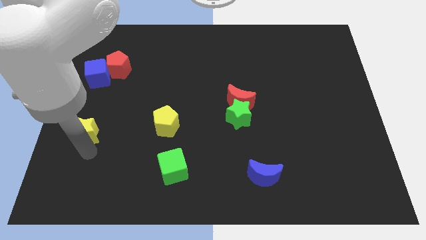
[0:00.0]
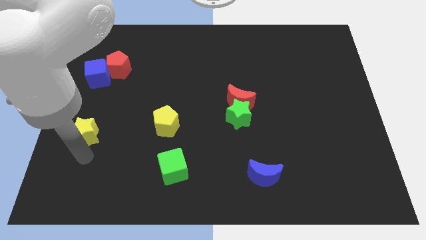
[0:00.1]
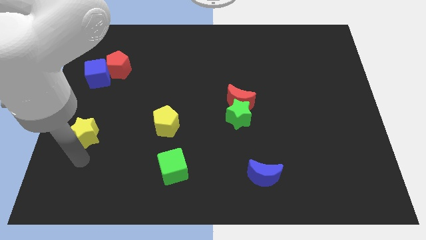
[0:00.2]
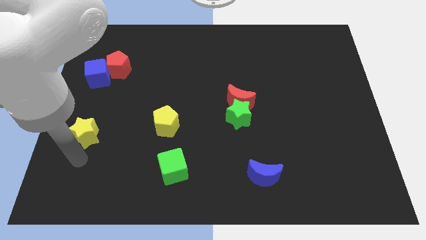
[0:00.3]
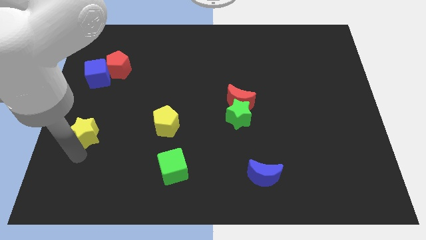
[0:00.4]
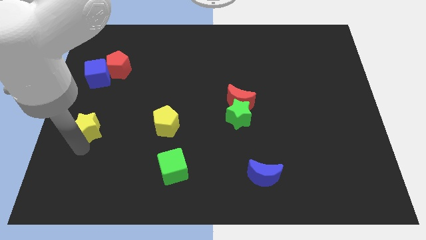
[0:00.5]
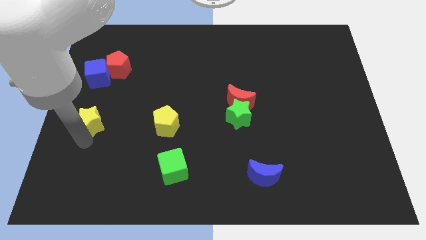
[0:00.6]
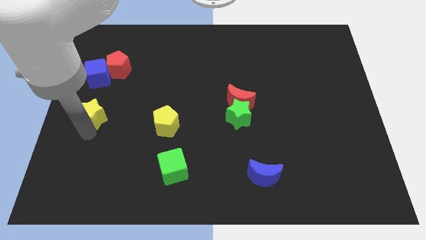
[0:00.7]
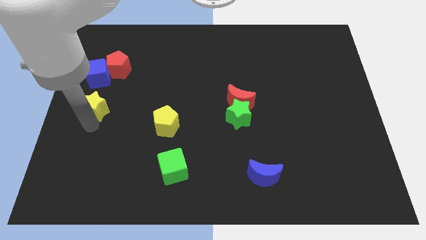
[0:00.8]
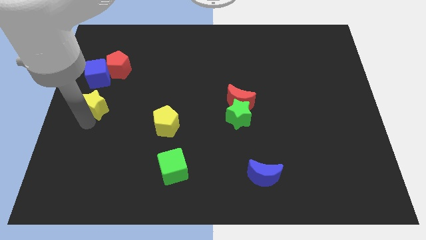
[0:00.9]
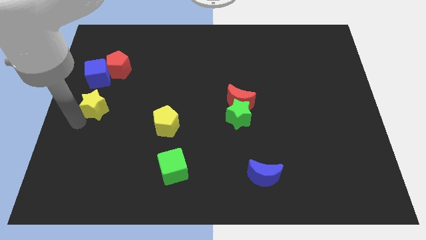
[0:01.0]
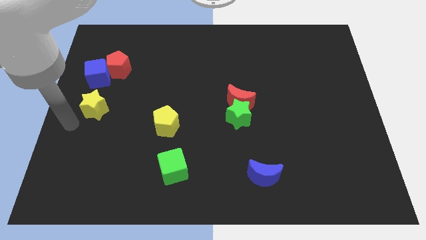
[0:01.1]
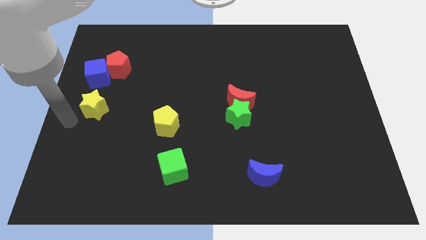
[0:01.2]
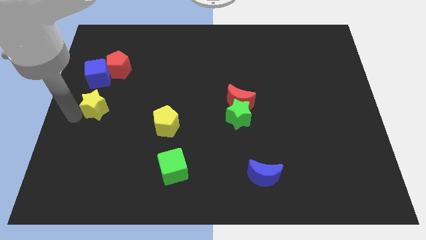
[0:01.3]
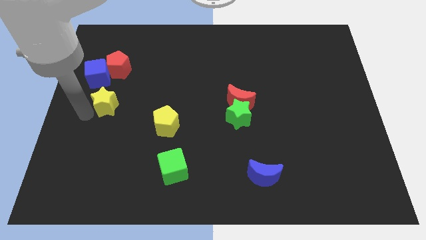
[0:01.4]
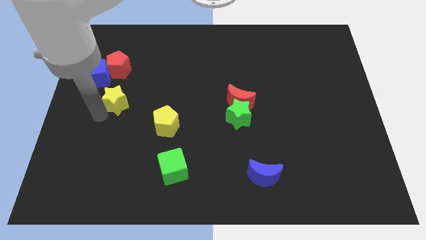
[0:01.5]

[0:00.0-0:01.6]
place the yellow star below the red pentagon

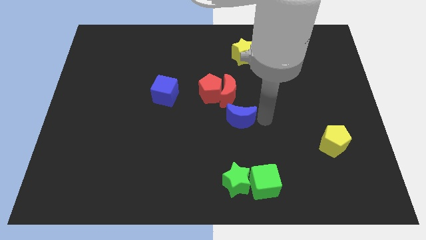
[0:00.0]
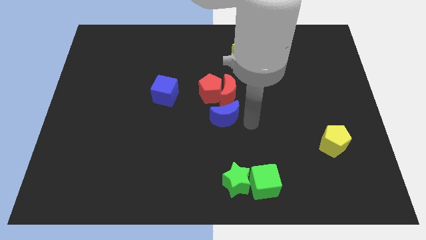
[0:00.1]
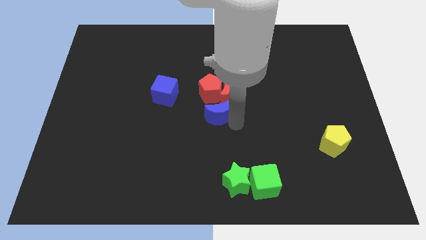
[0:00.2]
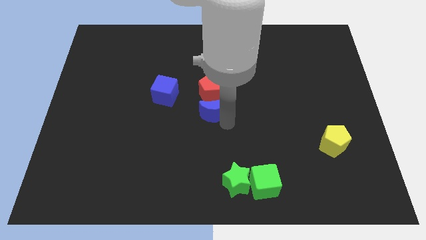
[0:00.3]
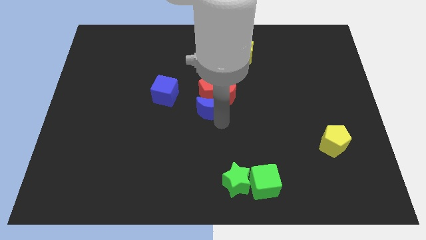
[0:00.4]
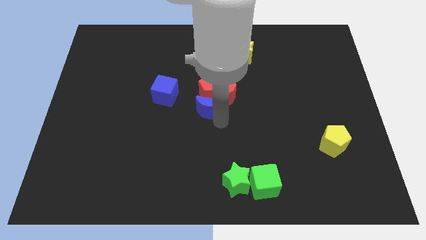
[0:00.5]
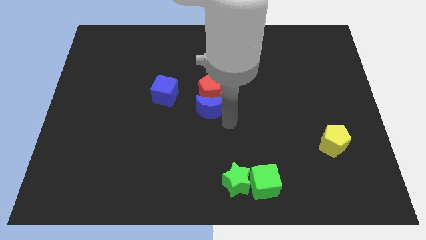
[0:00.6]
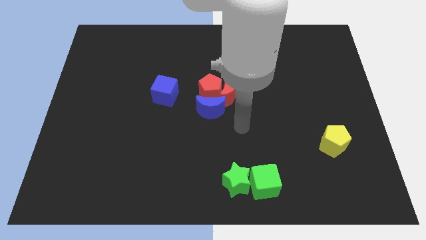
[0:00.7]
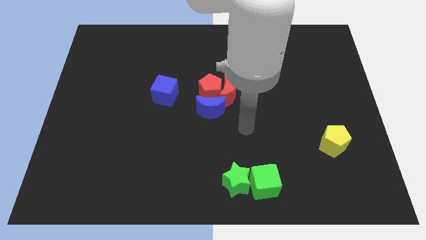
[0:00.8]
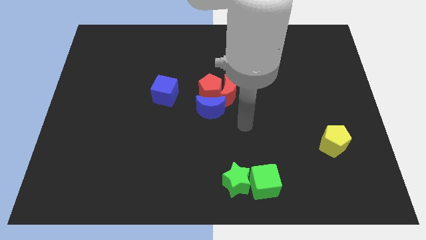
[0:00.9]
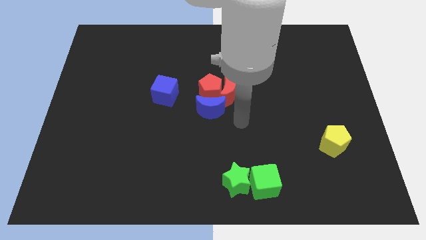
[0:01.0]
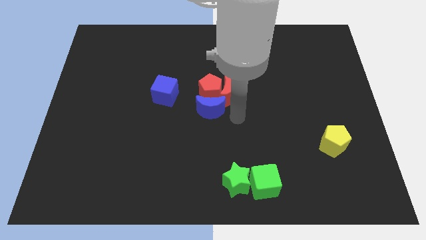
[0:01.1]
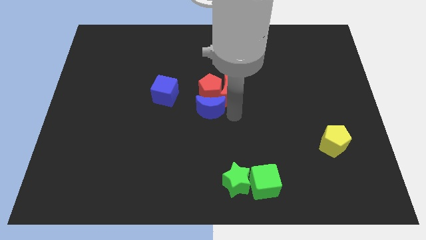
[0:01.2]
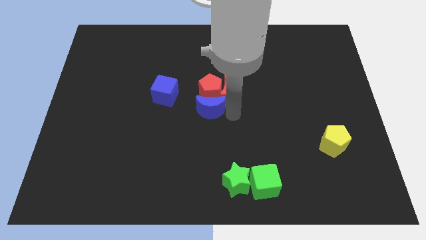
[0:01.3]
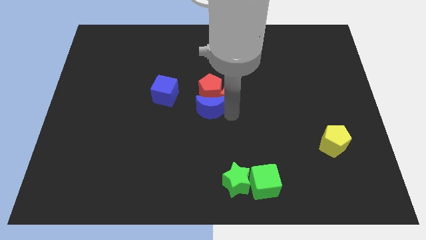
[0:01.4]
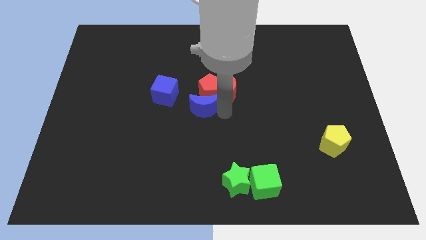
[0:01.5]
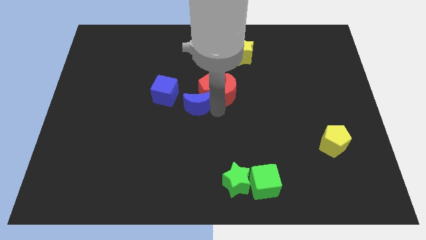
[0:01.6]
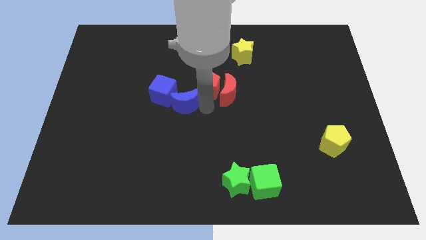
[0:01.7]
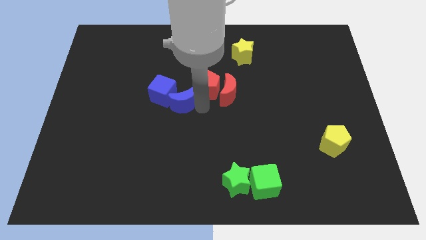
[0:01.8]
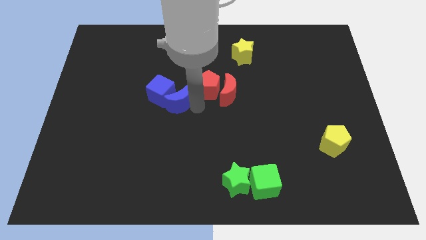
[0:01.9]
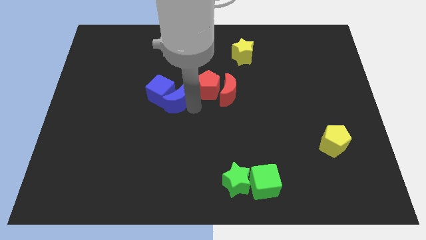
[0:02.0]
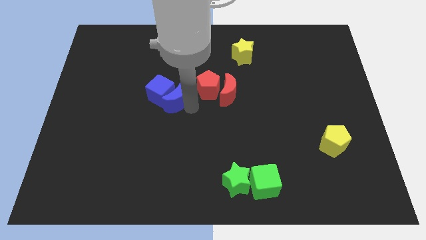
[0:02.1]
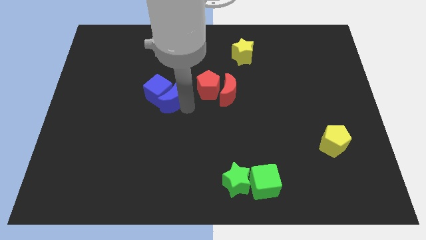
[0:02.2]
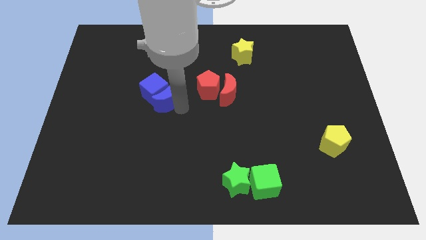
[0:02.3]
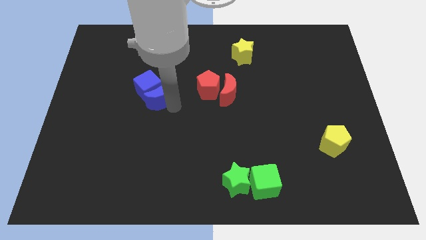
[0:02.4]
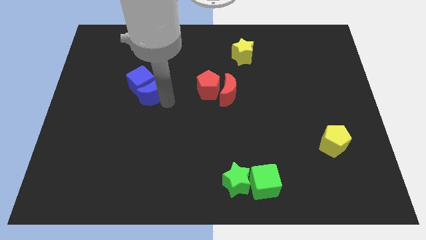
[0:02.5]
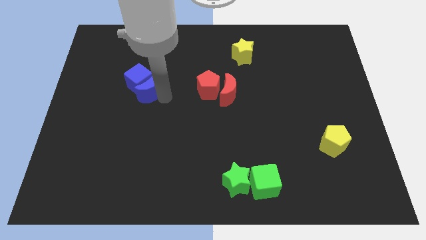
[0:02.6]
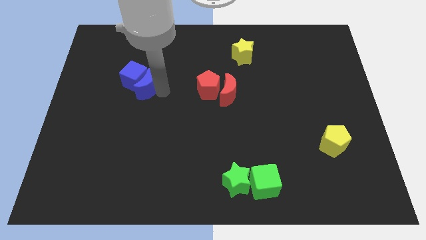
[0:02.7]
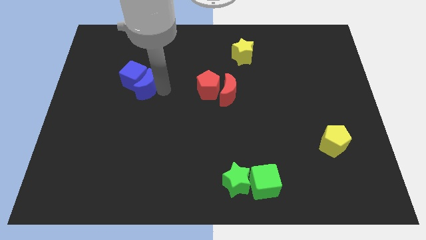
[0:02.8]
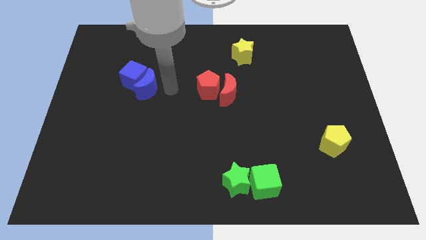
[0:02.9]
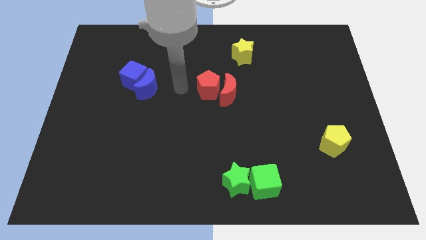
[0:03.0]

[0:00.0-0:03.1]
push the blue moon into the blue cube

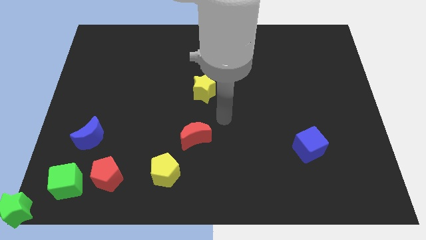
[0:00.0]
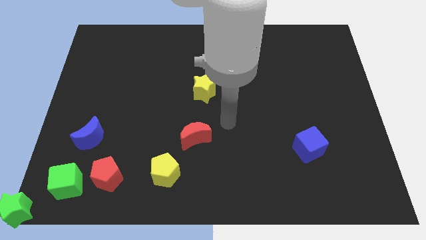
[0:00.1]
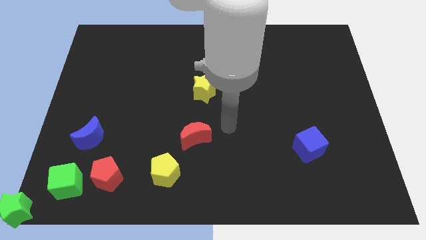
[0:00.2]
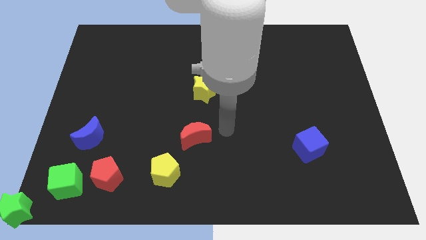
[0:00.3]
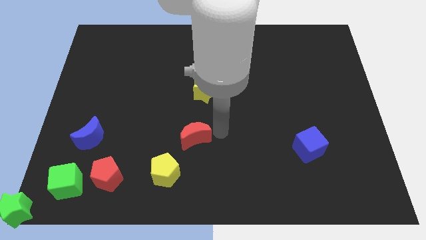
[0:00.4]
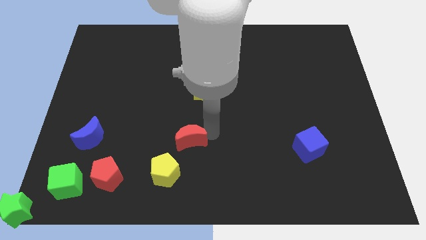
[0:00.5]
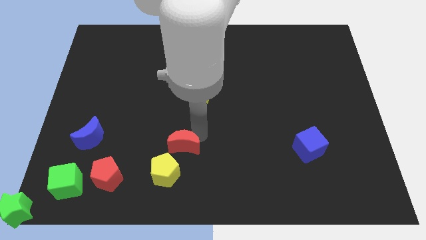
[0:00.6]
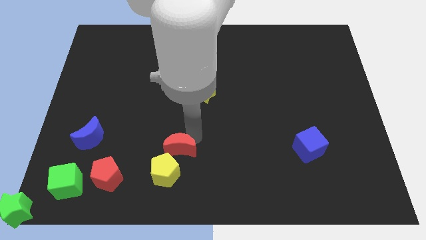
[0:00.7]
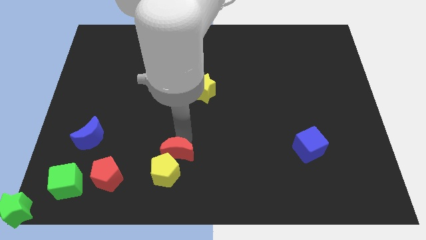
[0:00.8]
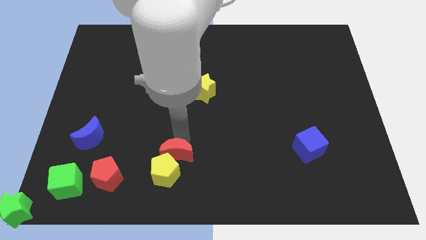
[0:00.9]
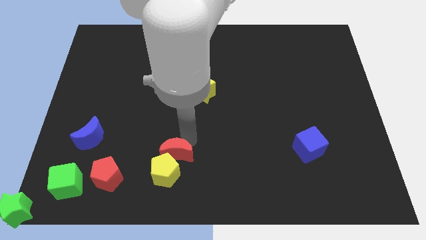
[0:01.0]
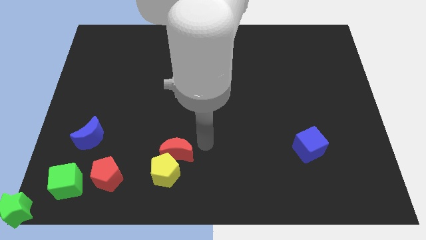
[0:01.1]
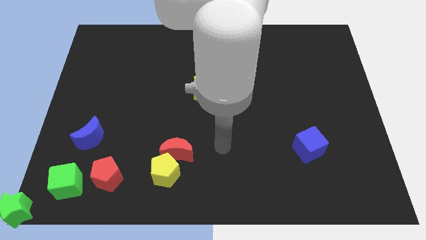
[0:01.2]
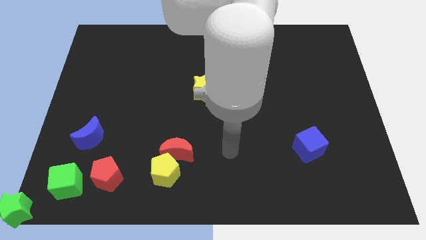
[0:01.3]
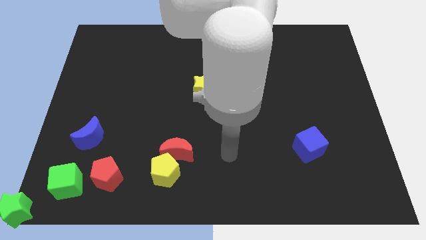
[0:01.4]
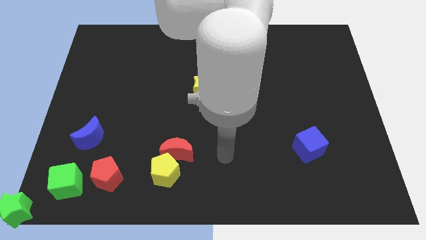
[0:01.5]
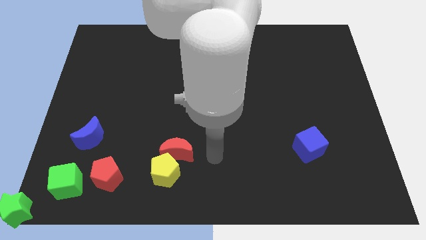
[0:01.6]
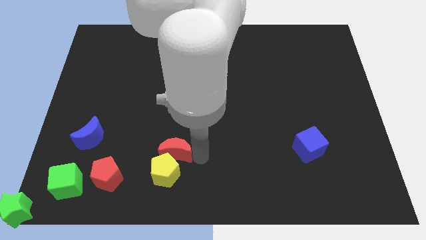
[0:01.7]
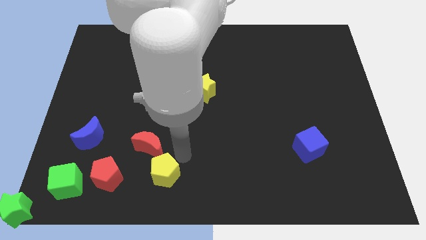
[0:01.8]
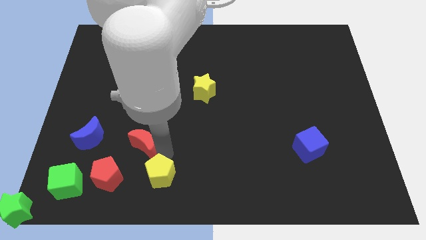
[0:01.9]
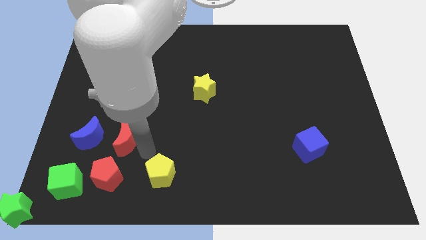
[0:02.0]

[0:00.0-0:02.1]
push the red moon on top of the red pentagon

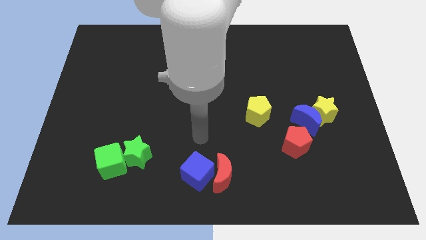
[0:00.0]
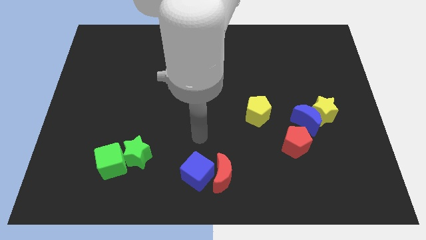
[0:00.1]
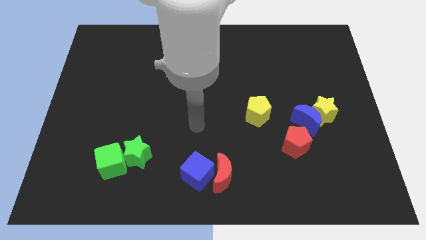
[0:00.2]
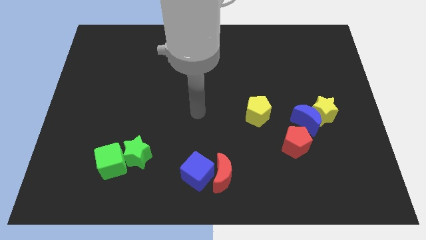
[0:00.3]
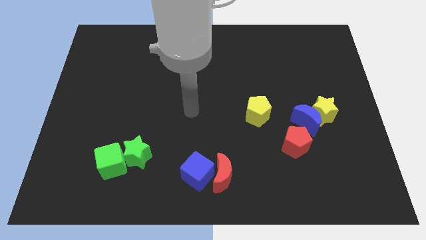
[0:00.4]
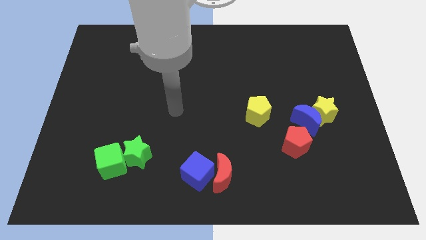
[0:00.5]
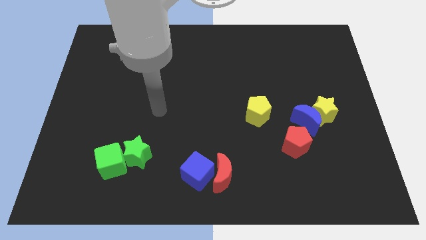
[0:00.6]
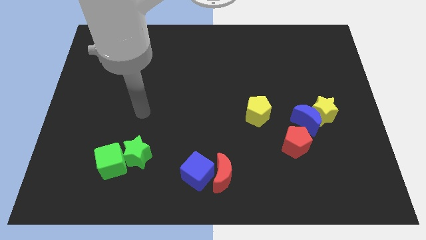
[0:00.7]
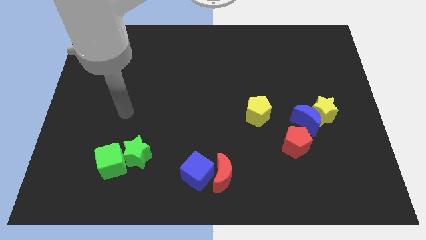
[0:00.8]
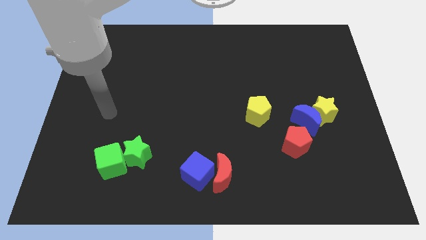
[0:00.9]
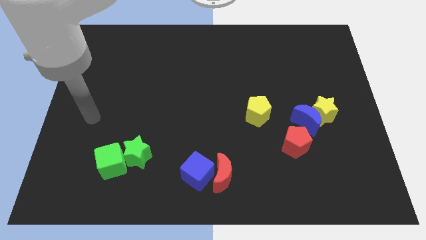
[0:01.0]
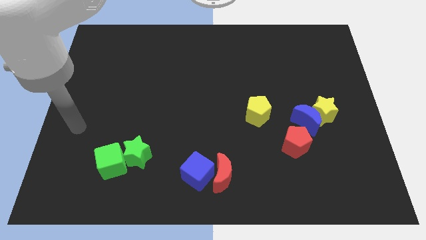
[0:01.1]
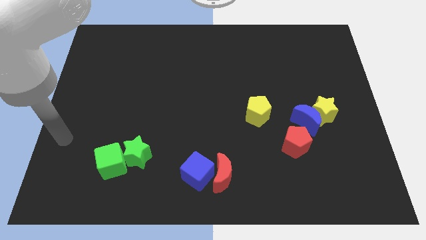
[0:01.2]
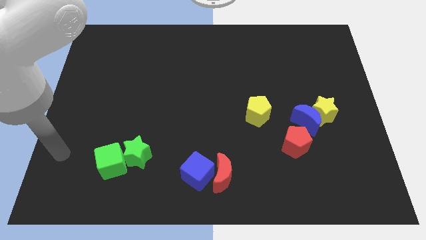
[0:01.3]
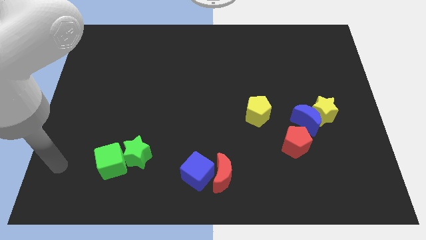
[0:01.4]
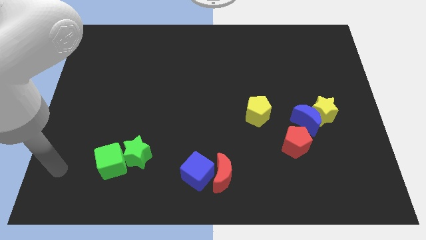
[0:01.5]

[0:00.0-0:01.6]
move your hand to the left side of the green cube

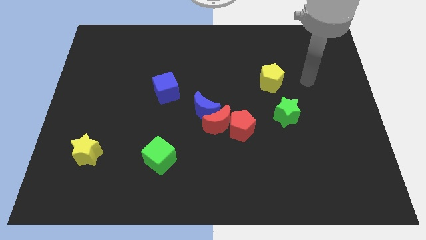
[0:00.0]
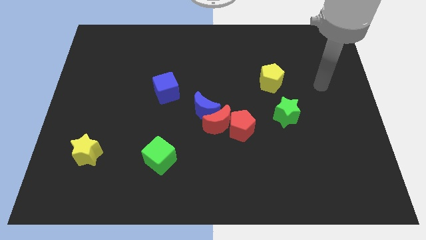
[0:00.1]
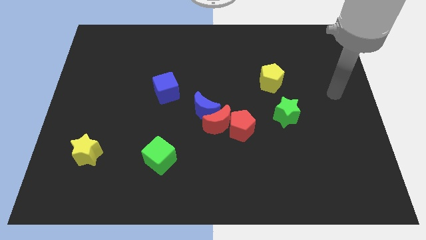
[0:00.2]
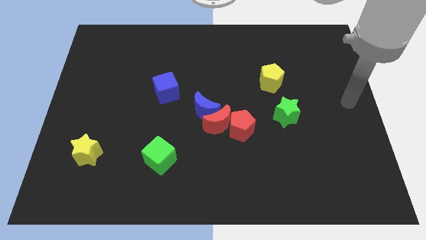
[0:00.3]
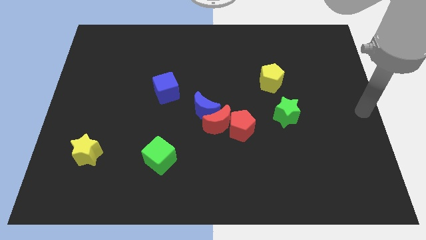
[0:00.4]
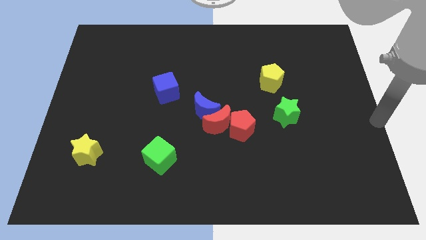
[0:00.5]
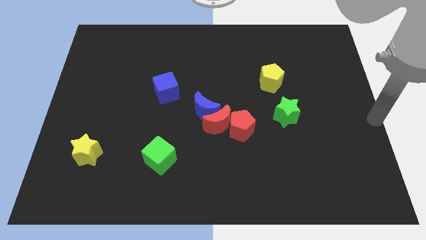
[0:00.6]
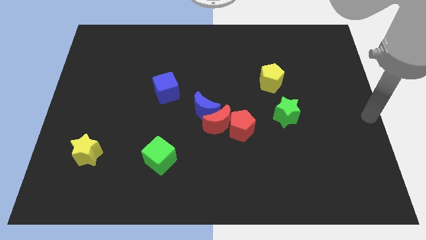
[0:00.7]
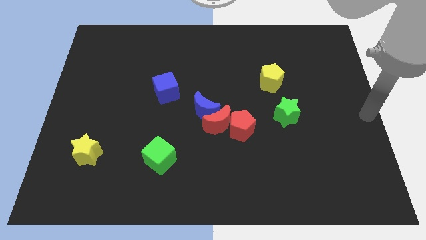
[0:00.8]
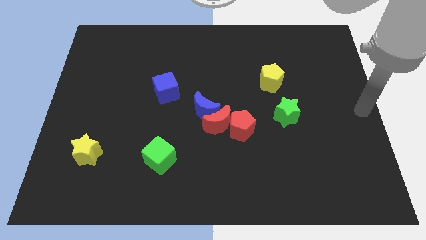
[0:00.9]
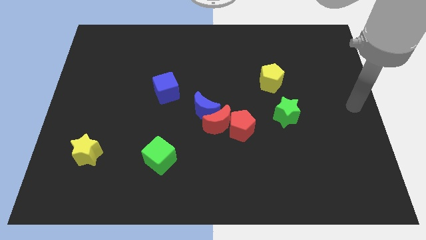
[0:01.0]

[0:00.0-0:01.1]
point your arm at the right center of the board
